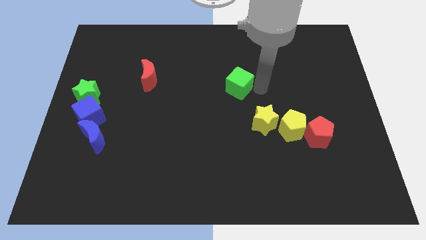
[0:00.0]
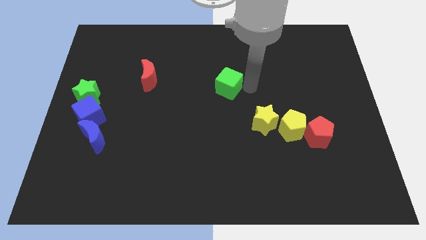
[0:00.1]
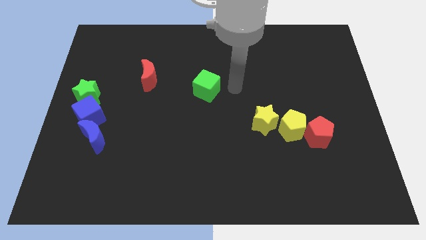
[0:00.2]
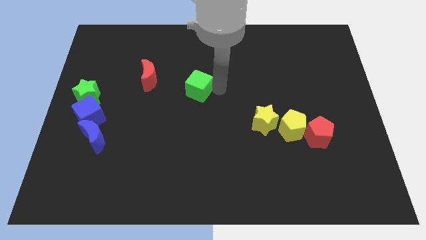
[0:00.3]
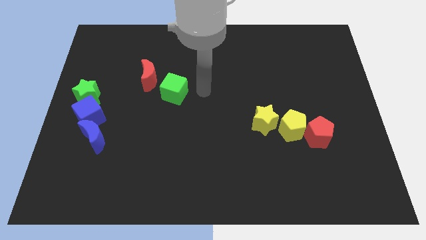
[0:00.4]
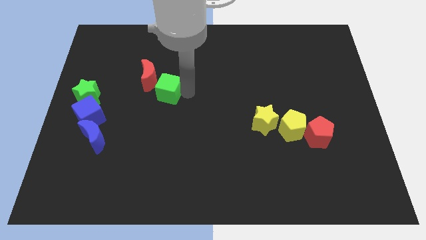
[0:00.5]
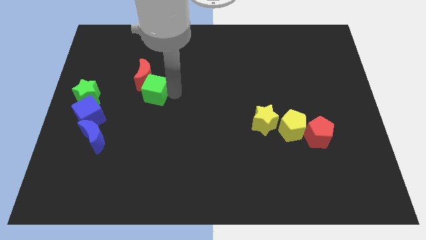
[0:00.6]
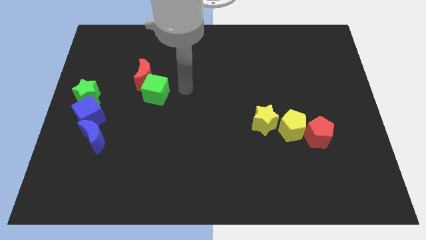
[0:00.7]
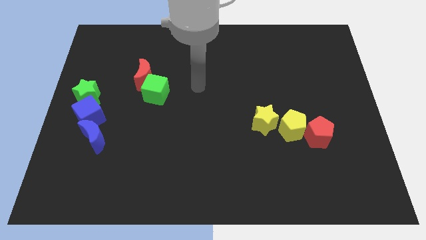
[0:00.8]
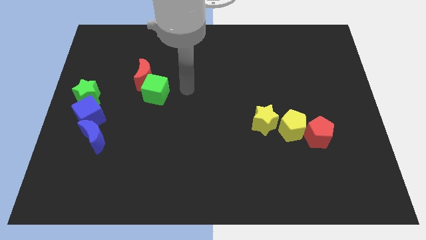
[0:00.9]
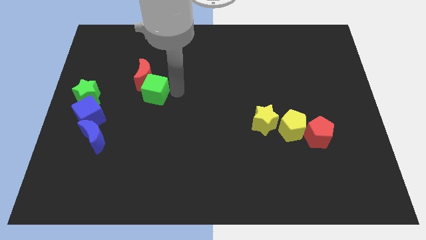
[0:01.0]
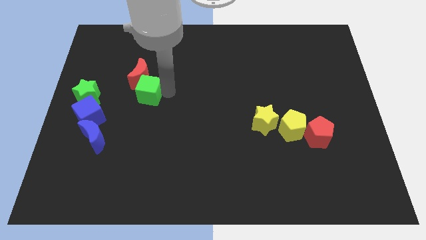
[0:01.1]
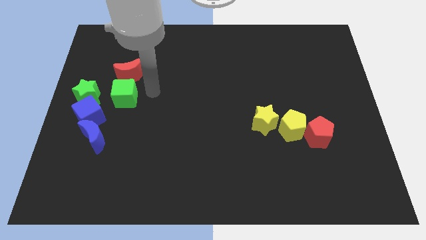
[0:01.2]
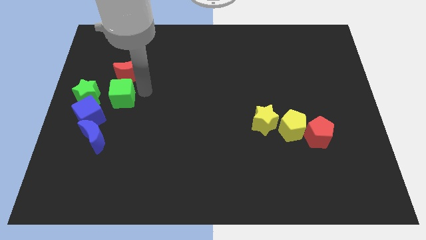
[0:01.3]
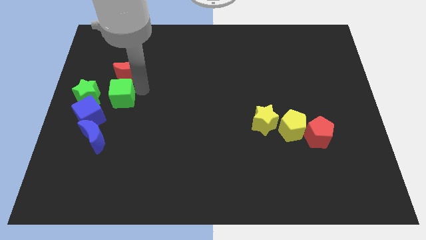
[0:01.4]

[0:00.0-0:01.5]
push the green cube to the bottom of the red crescent

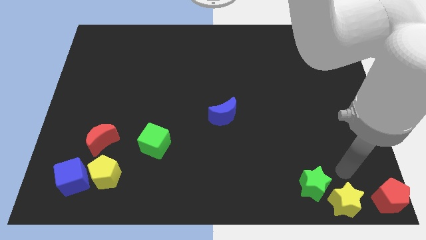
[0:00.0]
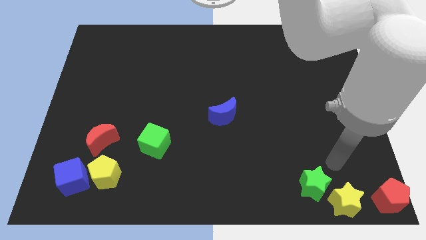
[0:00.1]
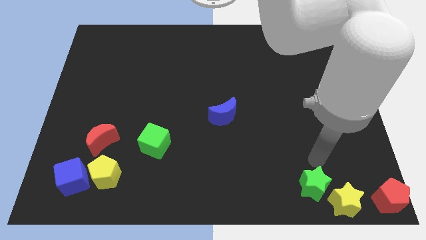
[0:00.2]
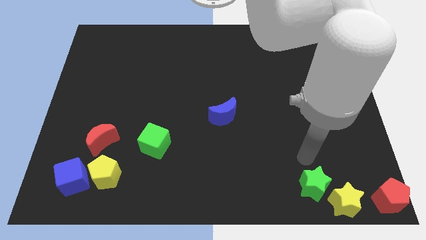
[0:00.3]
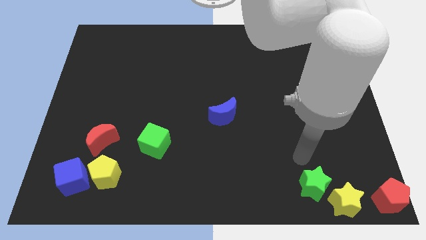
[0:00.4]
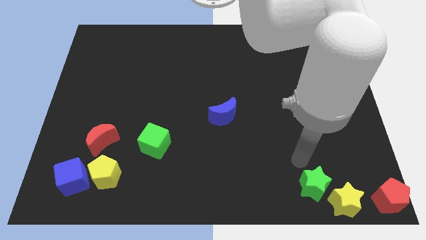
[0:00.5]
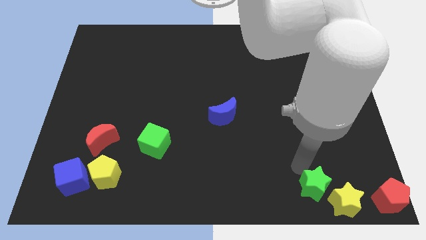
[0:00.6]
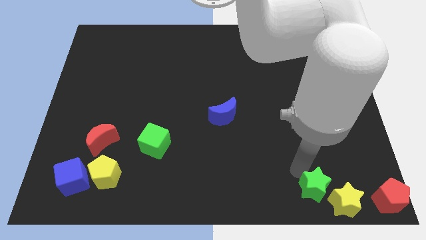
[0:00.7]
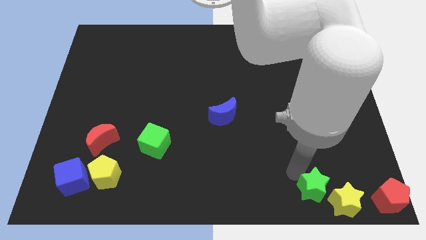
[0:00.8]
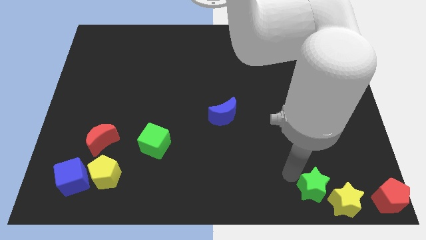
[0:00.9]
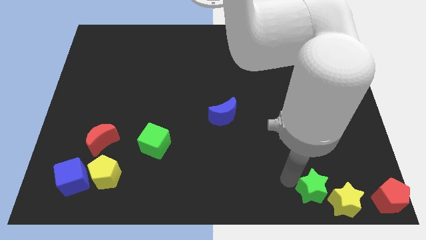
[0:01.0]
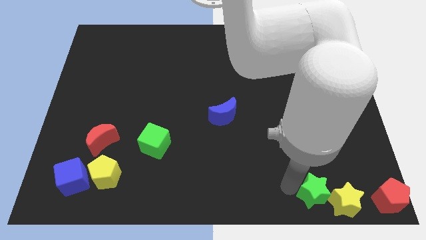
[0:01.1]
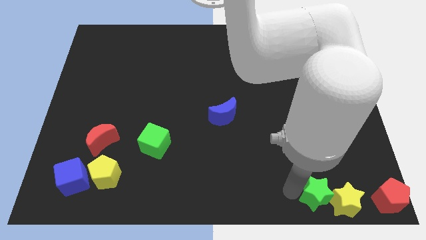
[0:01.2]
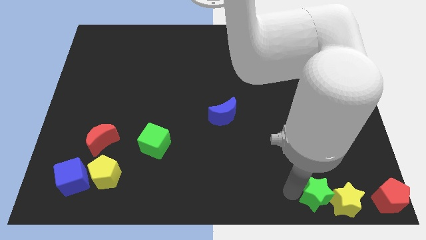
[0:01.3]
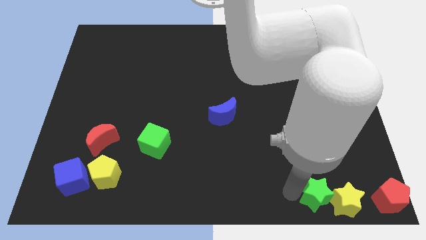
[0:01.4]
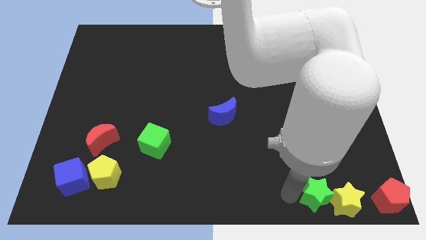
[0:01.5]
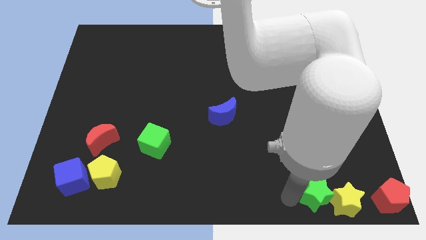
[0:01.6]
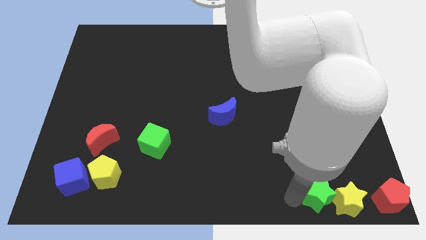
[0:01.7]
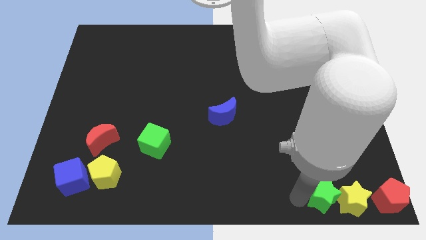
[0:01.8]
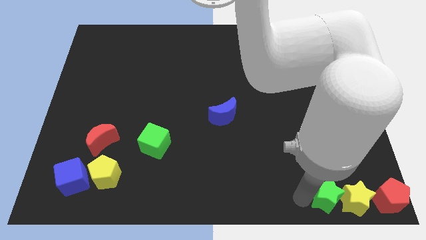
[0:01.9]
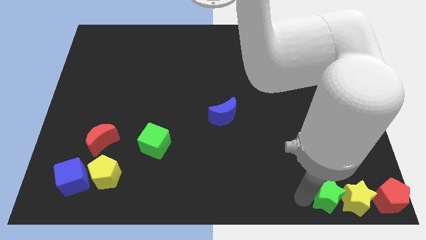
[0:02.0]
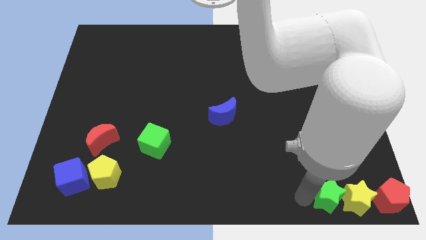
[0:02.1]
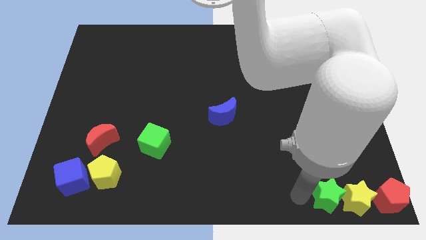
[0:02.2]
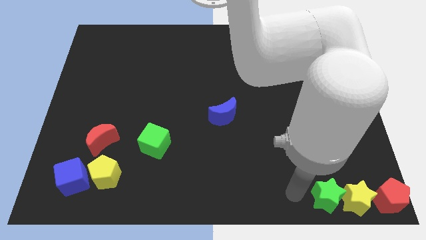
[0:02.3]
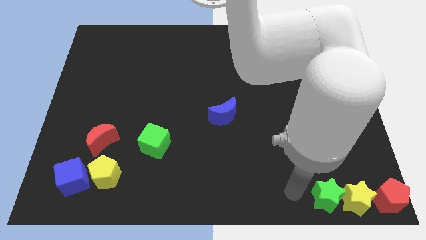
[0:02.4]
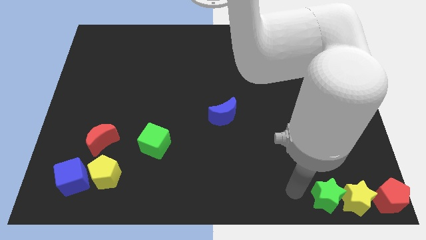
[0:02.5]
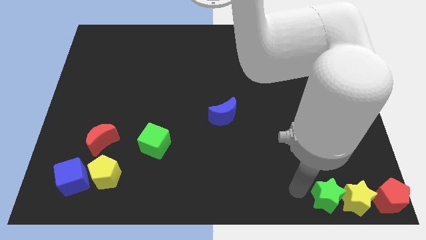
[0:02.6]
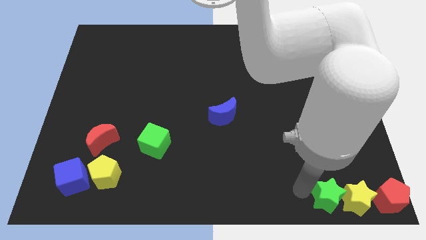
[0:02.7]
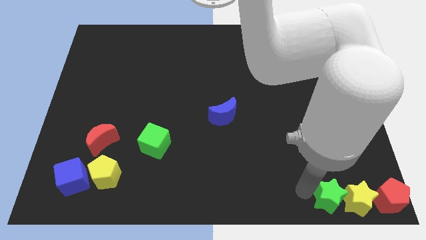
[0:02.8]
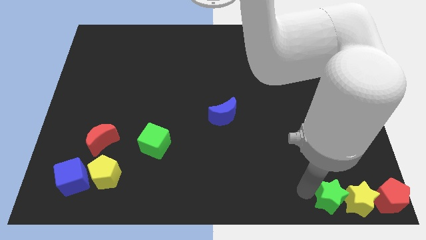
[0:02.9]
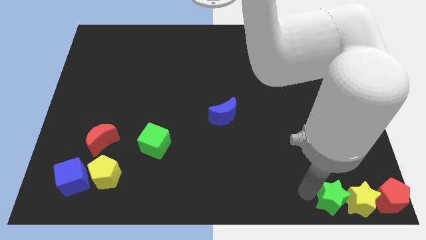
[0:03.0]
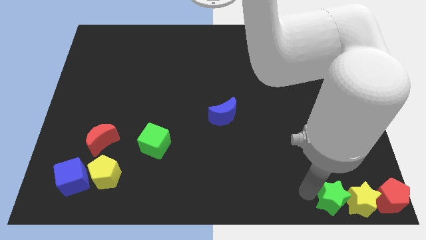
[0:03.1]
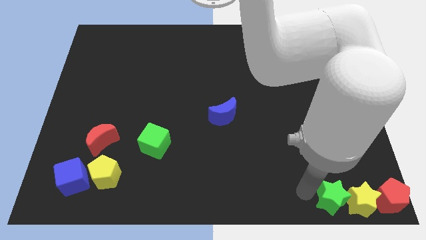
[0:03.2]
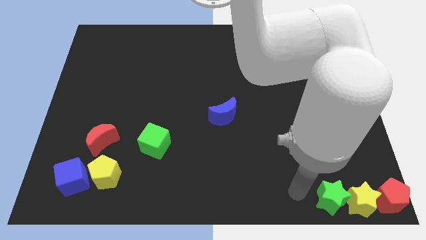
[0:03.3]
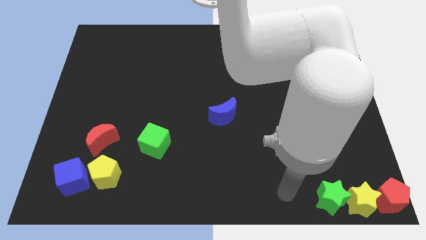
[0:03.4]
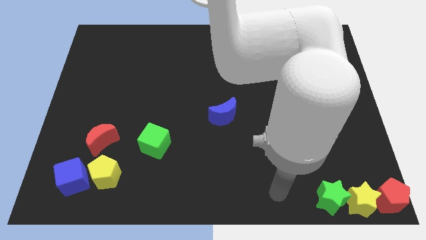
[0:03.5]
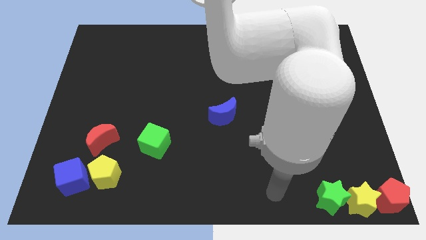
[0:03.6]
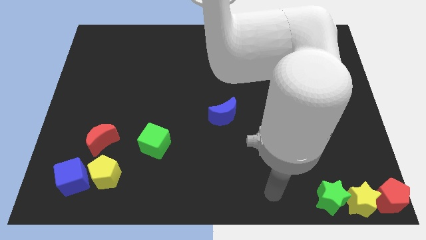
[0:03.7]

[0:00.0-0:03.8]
push the yellow star with the green star to the bottom right of the board

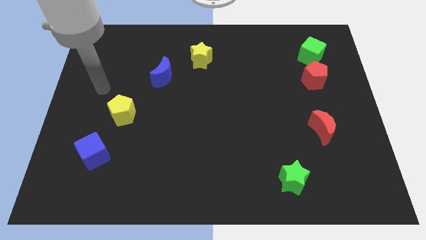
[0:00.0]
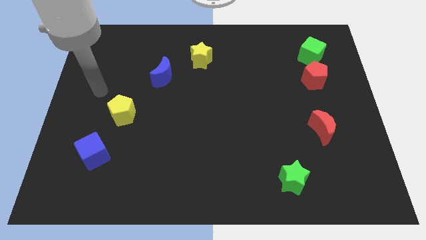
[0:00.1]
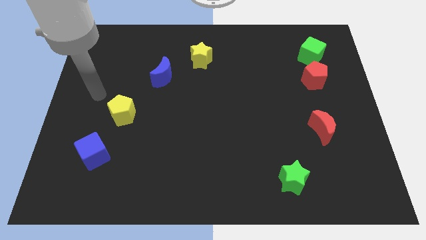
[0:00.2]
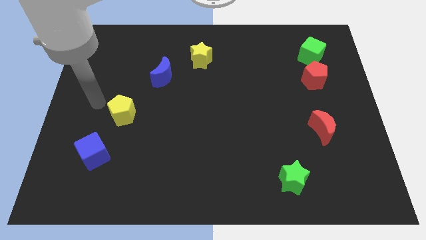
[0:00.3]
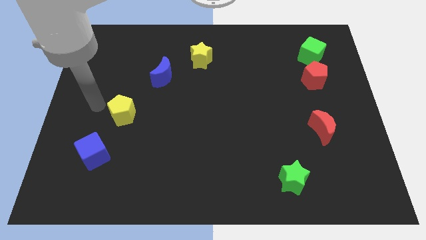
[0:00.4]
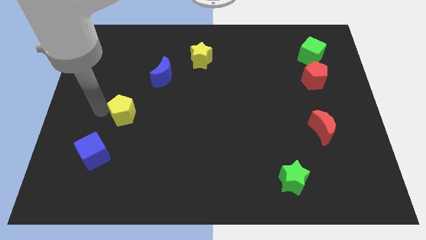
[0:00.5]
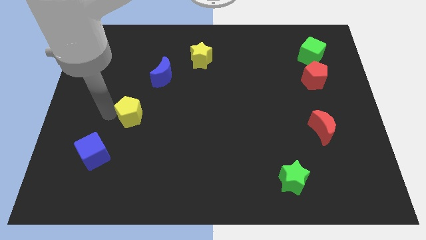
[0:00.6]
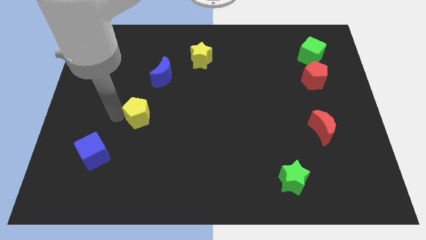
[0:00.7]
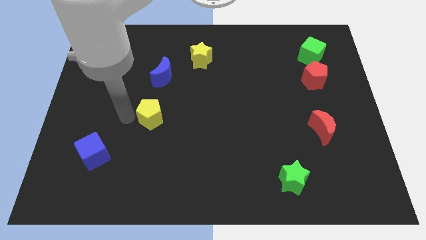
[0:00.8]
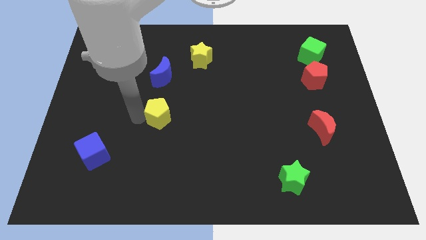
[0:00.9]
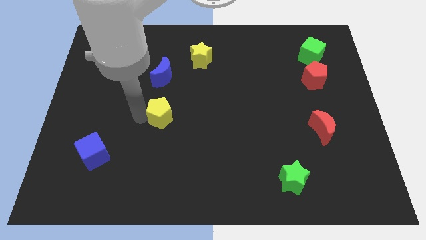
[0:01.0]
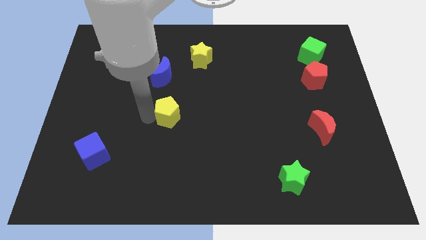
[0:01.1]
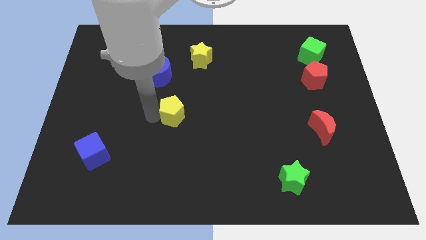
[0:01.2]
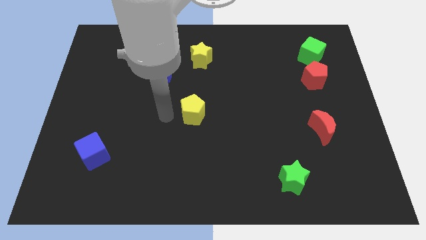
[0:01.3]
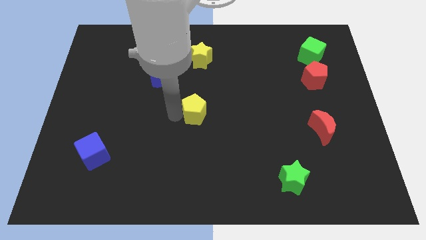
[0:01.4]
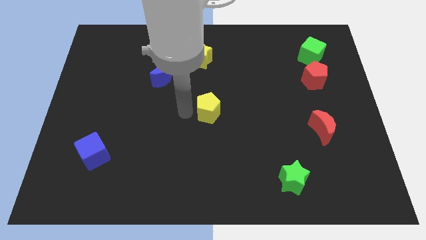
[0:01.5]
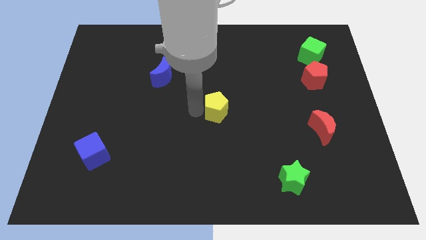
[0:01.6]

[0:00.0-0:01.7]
push the yellow pentagon to the center of the board

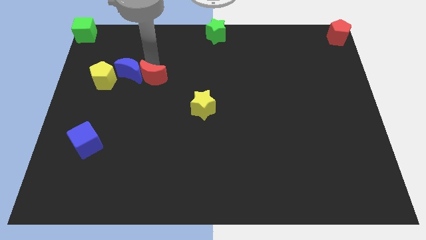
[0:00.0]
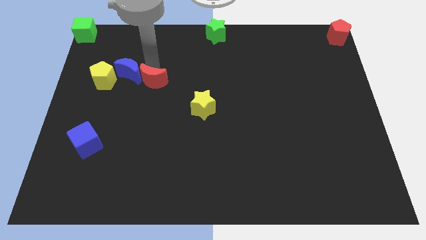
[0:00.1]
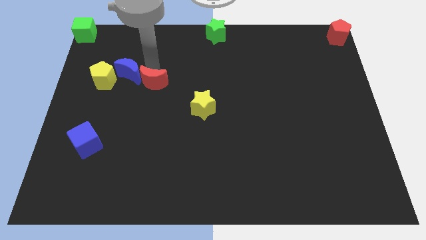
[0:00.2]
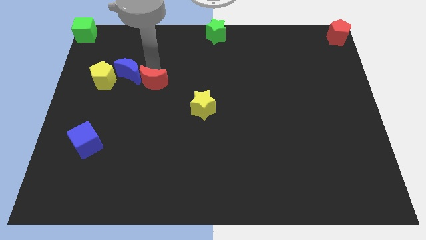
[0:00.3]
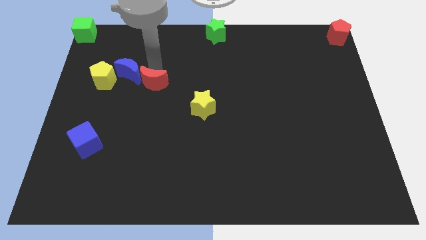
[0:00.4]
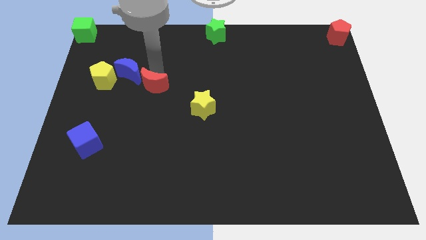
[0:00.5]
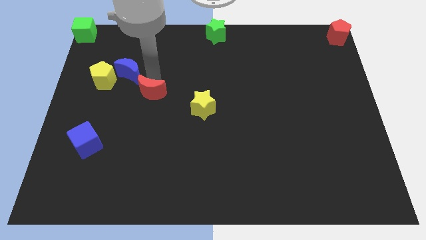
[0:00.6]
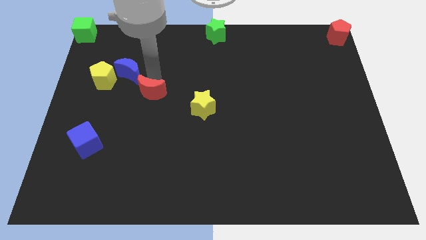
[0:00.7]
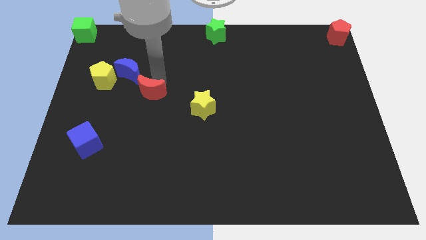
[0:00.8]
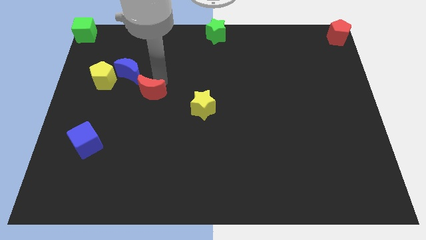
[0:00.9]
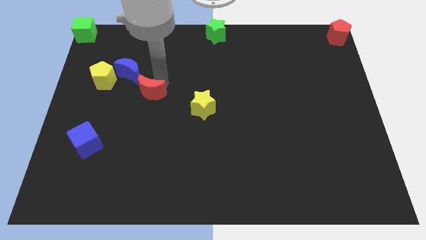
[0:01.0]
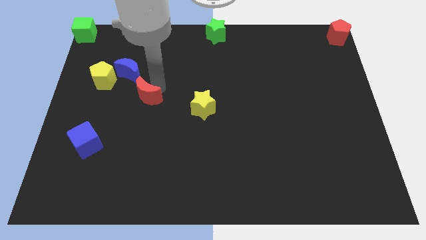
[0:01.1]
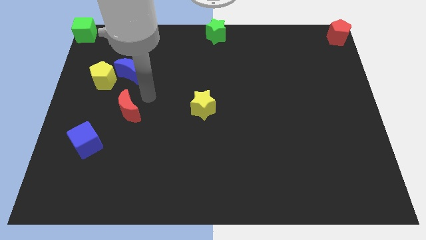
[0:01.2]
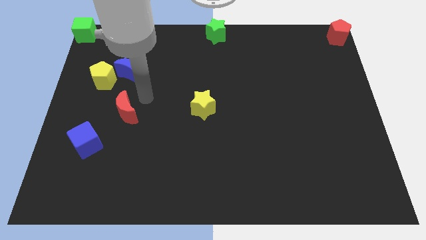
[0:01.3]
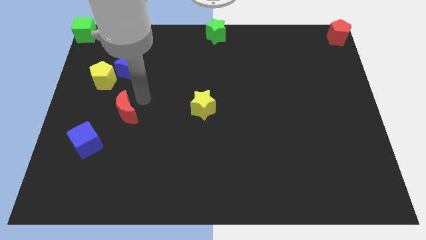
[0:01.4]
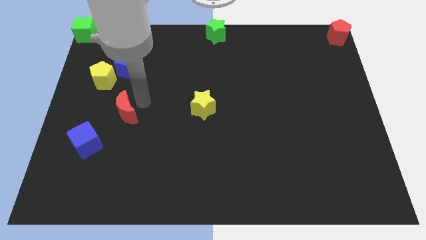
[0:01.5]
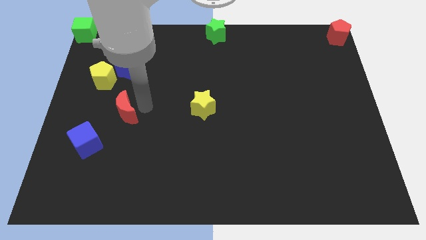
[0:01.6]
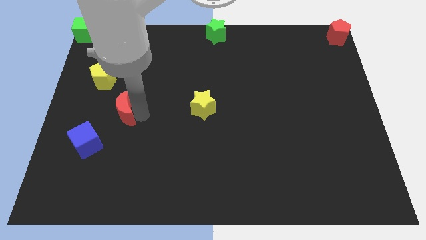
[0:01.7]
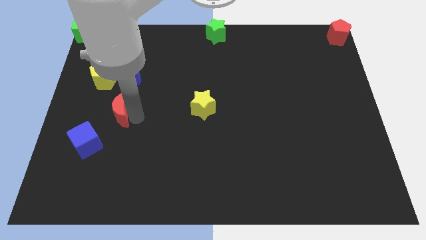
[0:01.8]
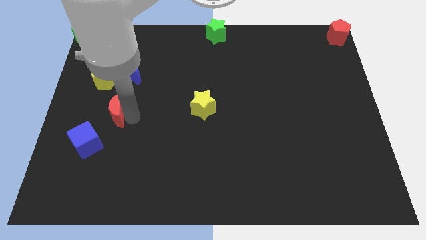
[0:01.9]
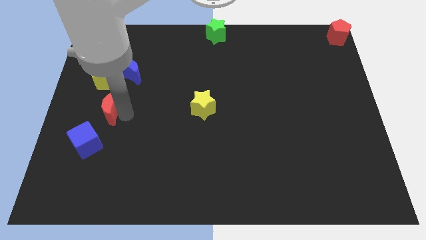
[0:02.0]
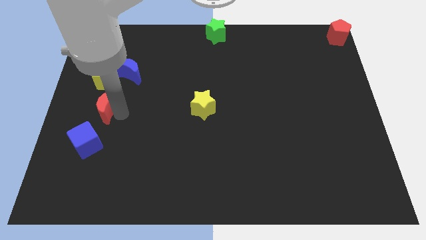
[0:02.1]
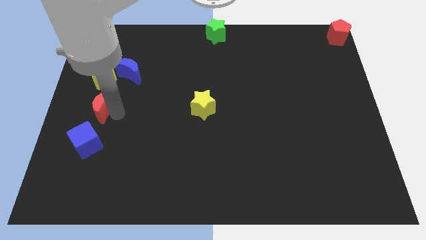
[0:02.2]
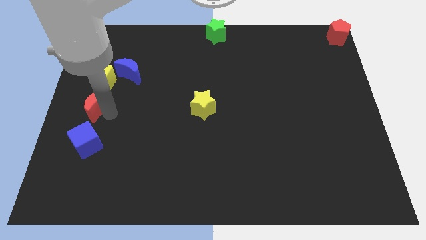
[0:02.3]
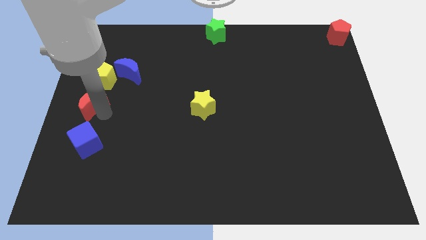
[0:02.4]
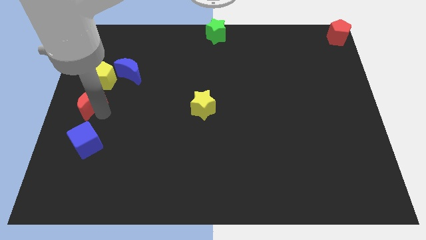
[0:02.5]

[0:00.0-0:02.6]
place the red moon in between yellow pentagon and blue moon
